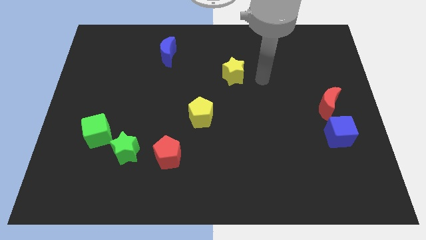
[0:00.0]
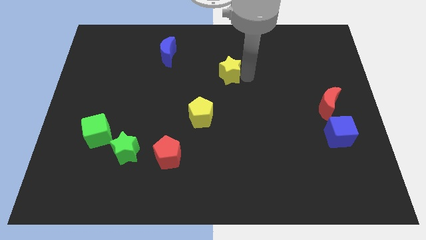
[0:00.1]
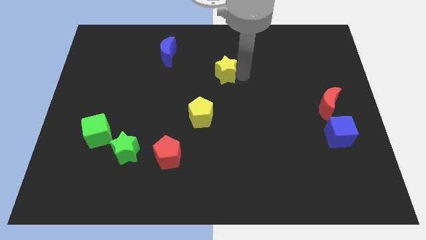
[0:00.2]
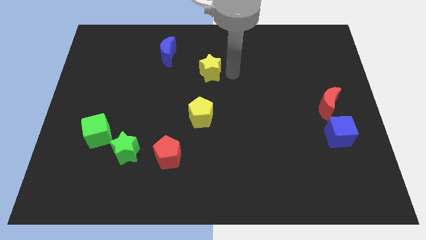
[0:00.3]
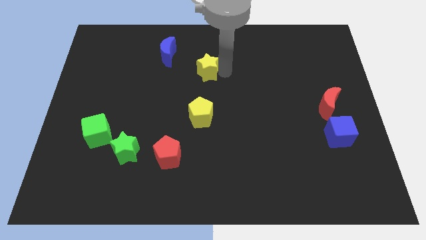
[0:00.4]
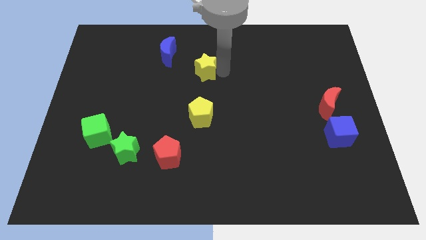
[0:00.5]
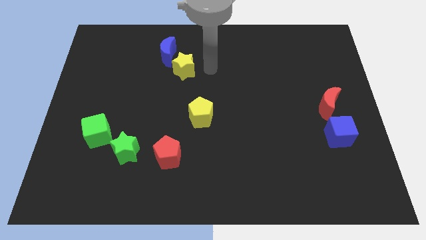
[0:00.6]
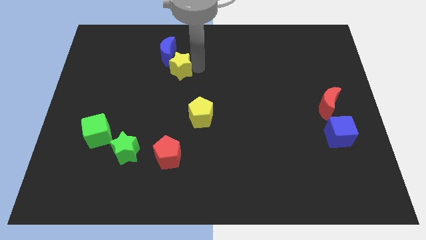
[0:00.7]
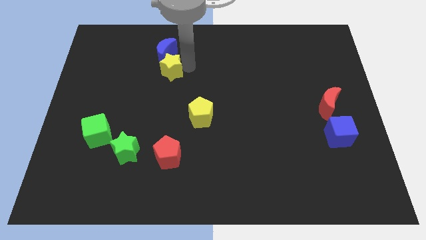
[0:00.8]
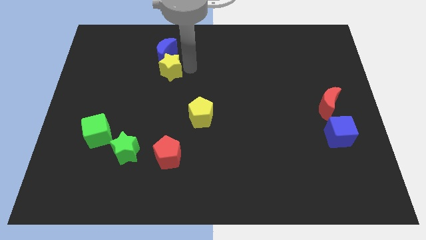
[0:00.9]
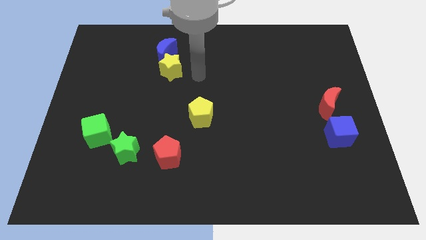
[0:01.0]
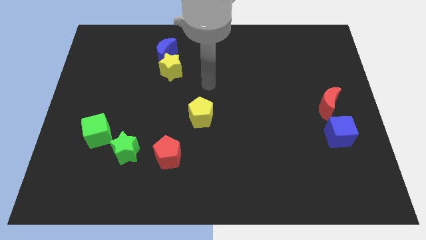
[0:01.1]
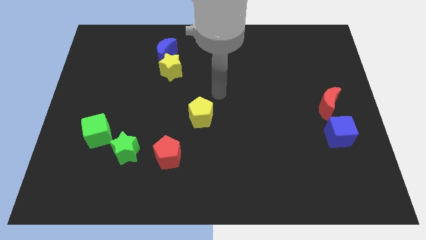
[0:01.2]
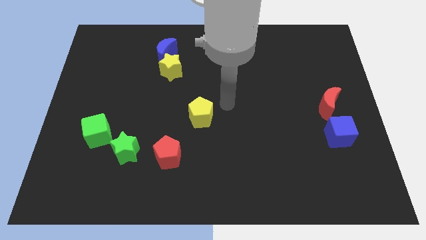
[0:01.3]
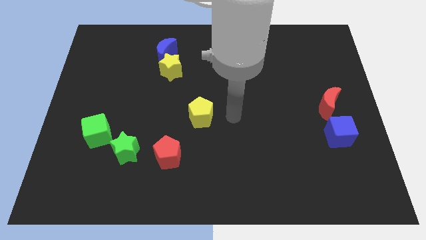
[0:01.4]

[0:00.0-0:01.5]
move the yellow star to the bottom of the blue moon

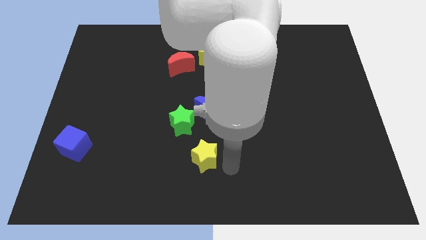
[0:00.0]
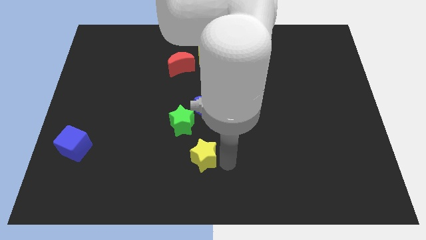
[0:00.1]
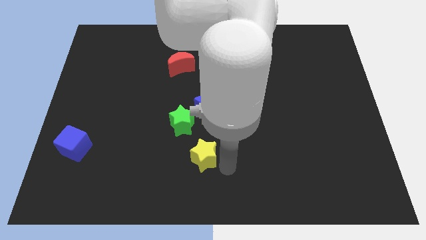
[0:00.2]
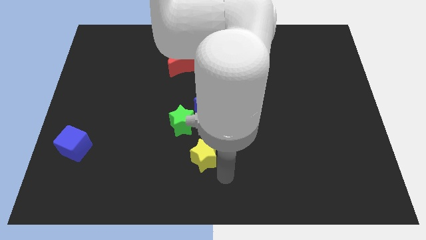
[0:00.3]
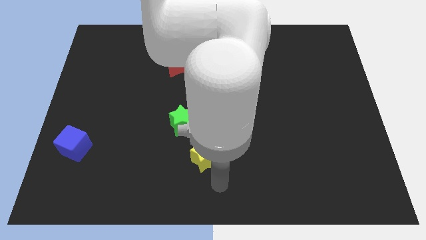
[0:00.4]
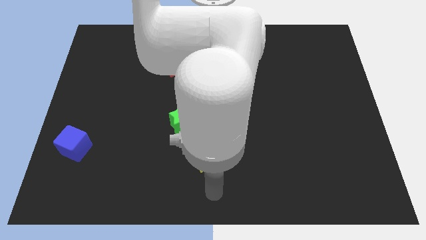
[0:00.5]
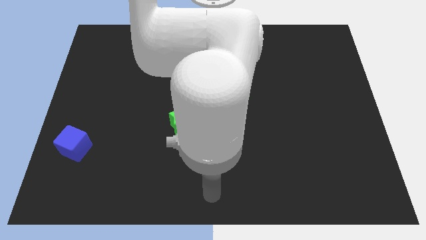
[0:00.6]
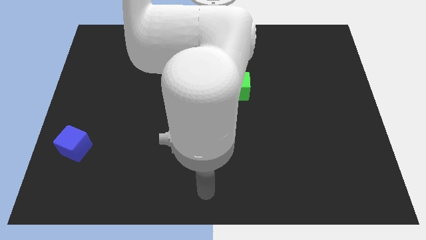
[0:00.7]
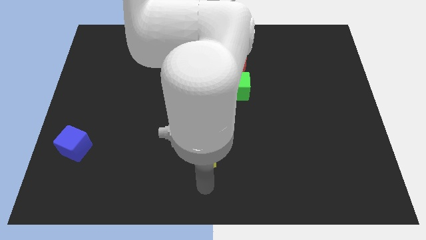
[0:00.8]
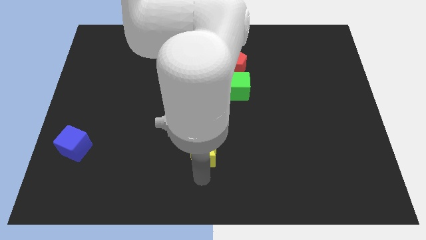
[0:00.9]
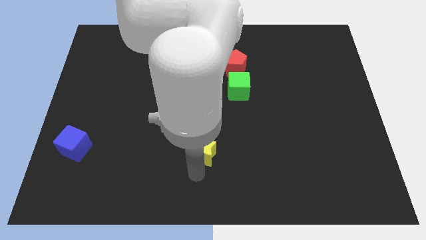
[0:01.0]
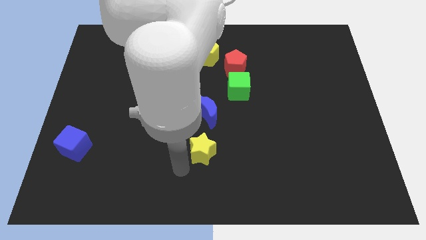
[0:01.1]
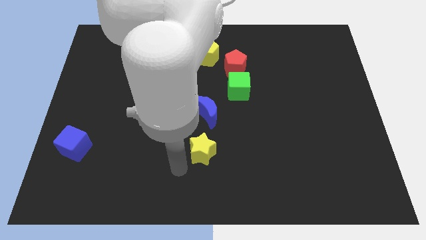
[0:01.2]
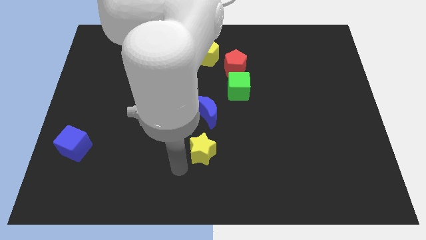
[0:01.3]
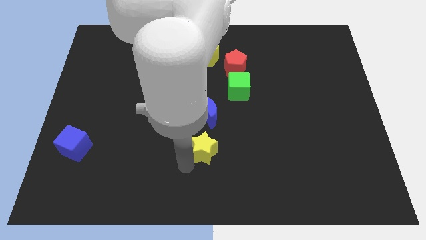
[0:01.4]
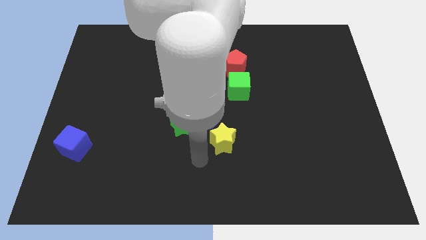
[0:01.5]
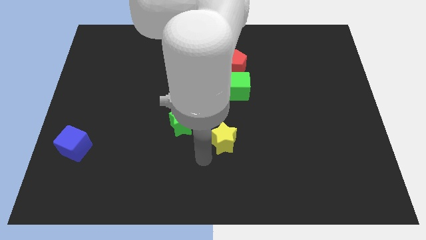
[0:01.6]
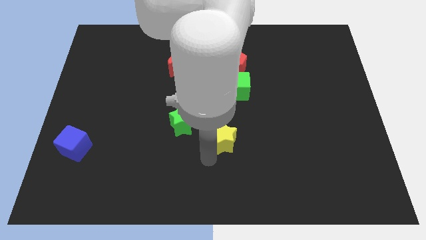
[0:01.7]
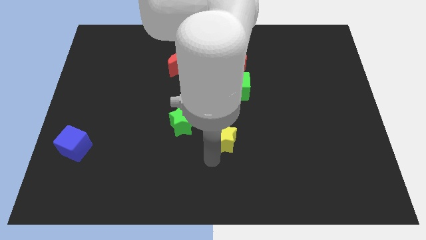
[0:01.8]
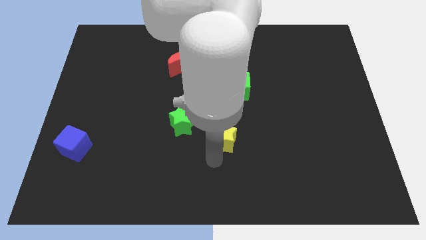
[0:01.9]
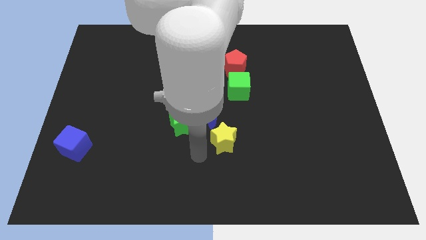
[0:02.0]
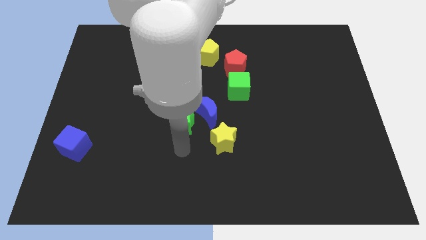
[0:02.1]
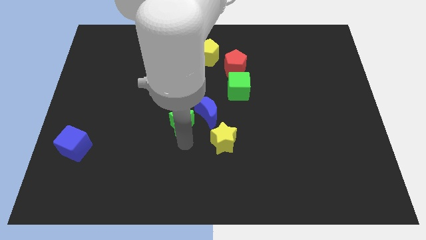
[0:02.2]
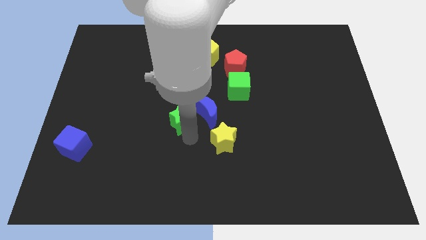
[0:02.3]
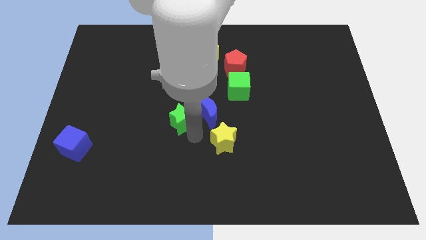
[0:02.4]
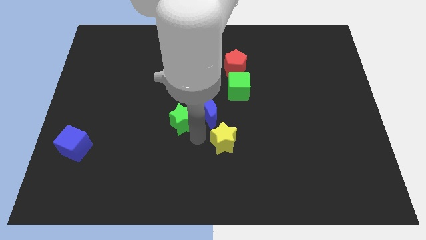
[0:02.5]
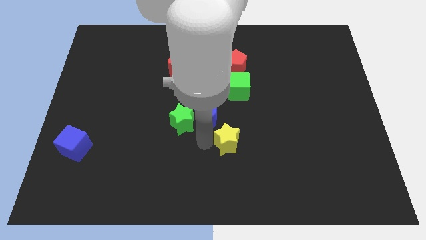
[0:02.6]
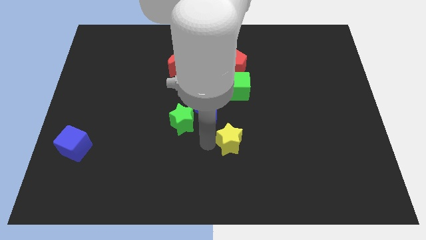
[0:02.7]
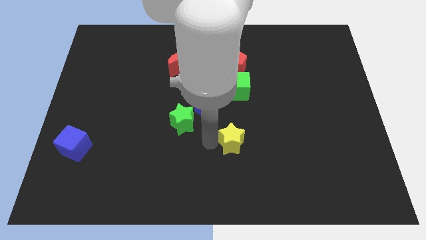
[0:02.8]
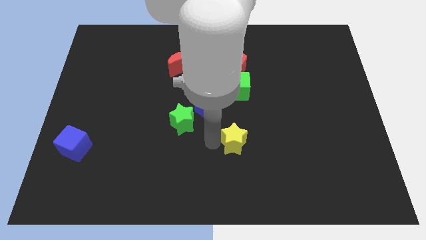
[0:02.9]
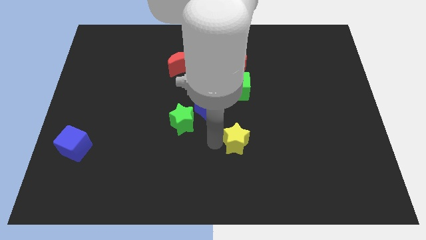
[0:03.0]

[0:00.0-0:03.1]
move the yellow star vertically below the green cube

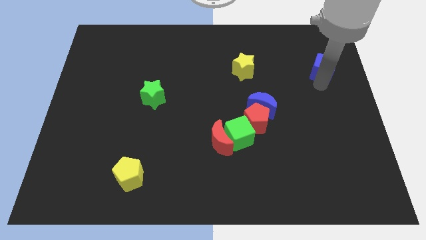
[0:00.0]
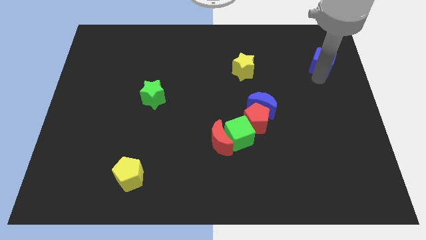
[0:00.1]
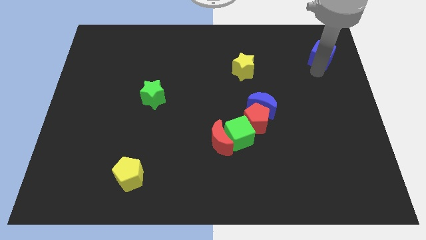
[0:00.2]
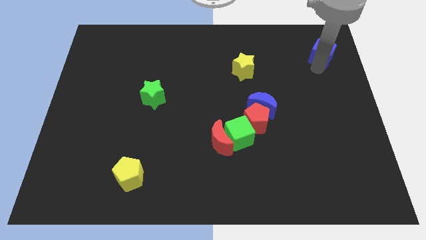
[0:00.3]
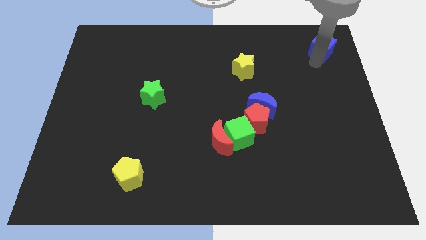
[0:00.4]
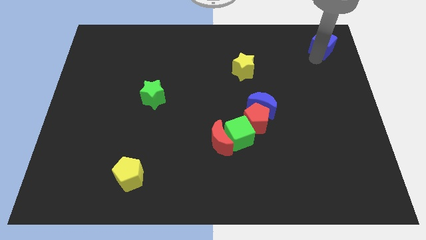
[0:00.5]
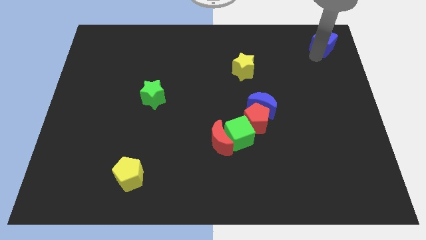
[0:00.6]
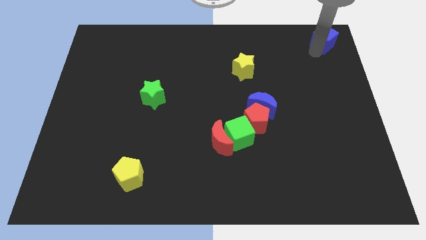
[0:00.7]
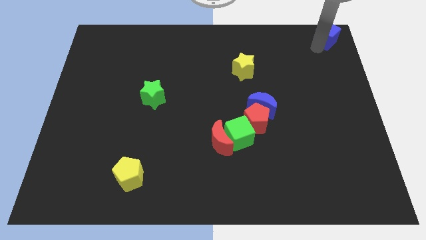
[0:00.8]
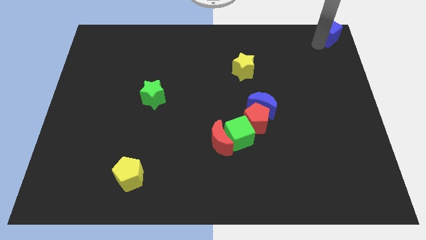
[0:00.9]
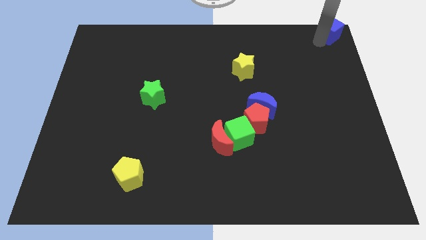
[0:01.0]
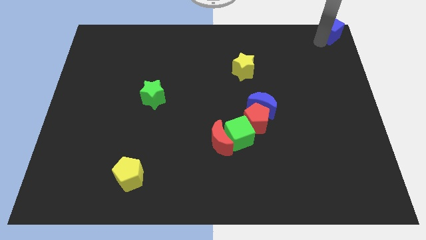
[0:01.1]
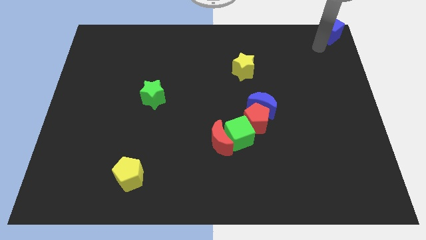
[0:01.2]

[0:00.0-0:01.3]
place the blue cube at the top right corner

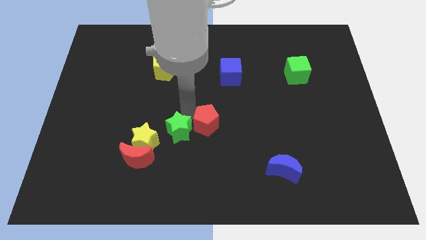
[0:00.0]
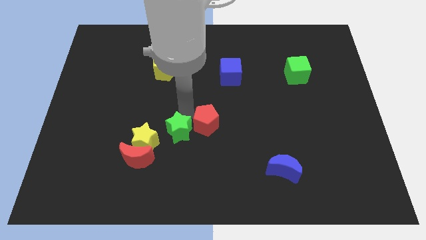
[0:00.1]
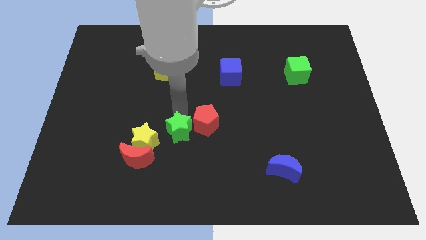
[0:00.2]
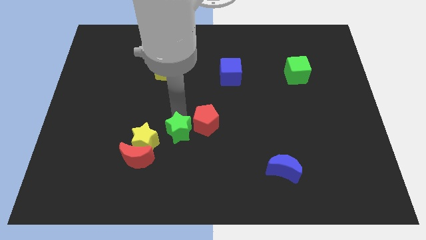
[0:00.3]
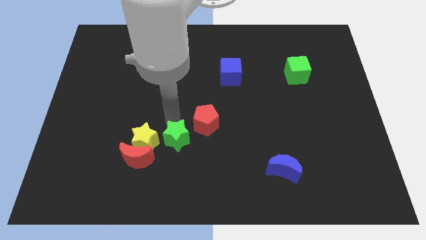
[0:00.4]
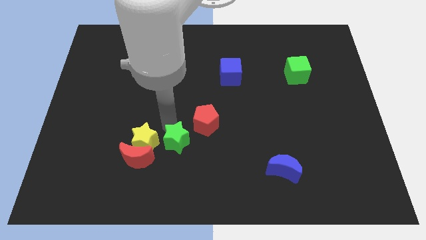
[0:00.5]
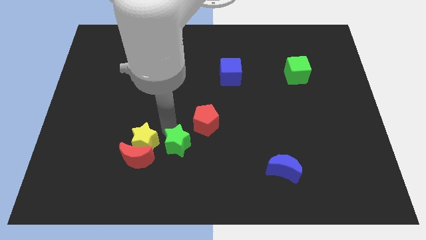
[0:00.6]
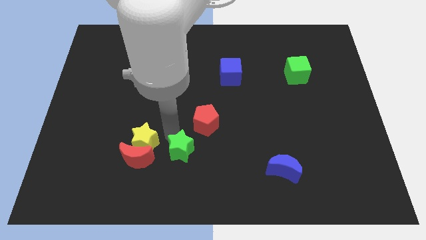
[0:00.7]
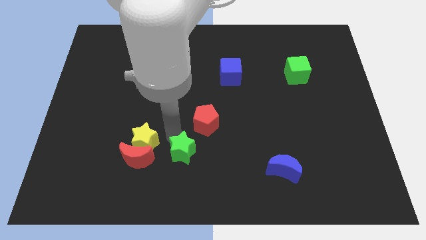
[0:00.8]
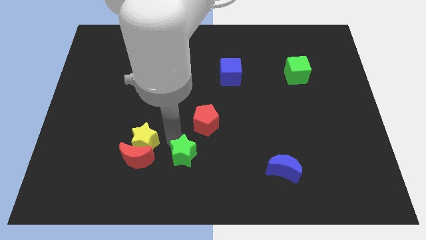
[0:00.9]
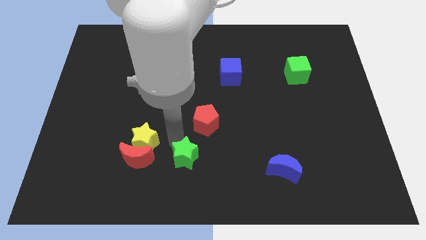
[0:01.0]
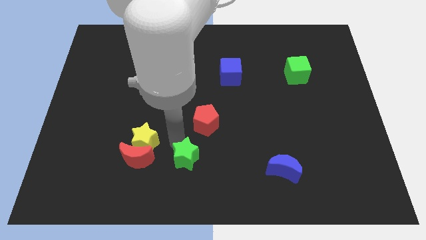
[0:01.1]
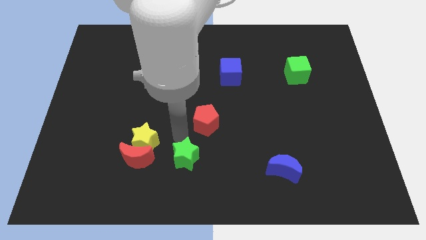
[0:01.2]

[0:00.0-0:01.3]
push the green star slightly downwards

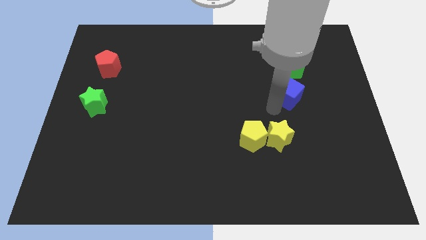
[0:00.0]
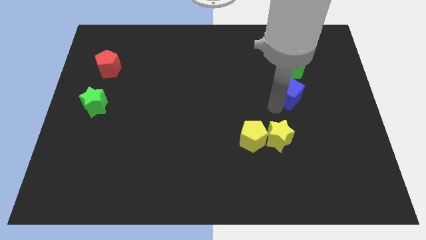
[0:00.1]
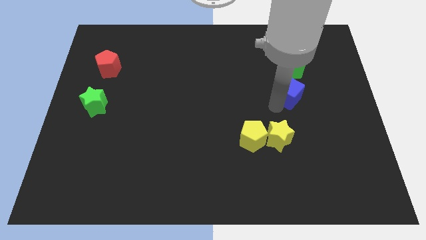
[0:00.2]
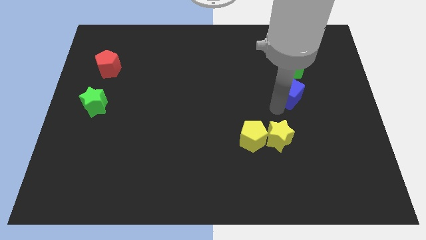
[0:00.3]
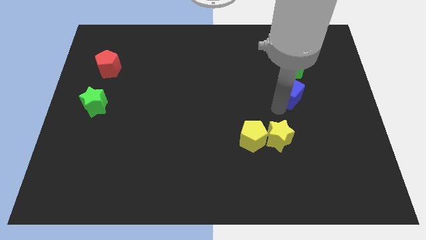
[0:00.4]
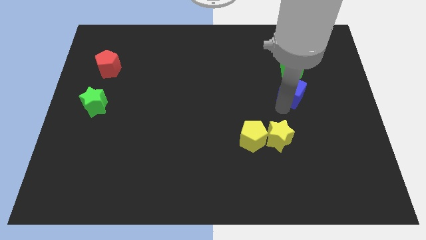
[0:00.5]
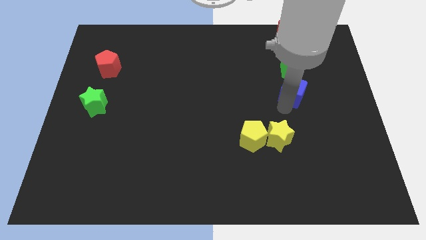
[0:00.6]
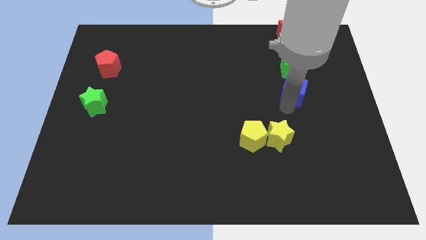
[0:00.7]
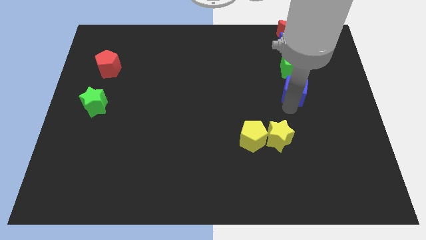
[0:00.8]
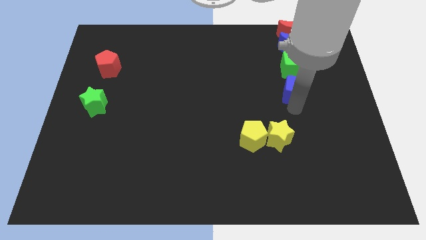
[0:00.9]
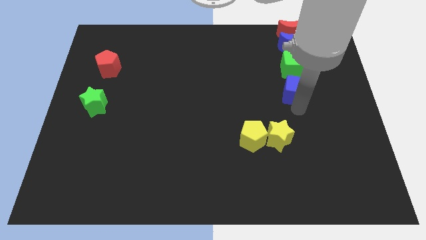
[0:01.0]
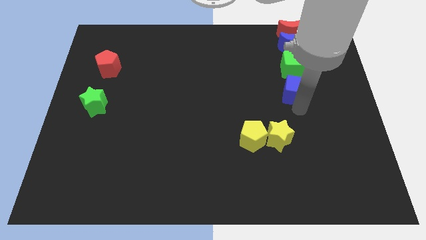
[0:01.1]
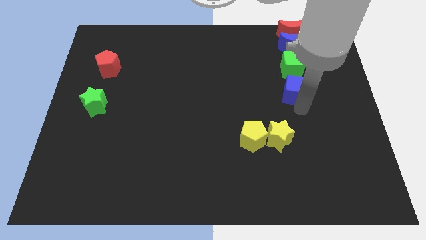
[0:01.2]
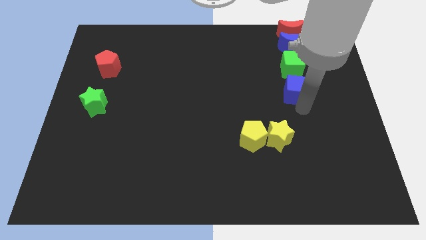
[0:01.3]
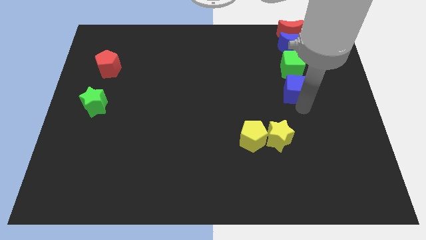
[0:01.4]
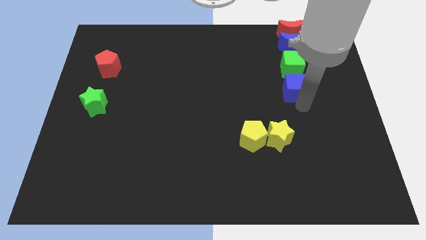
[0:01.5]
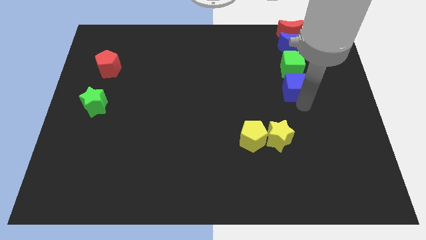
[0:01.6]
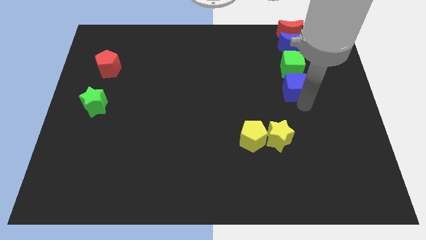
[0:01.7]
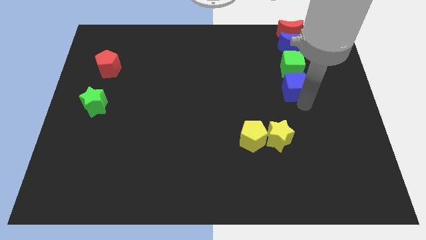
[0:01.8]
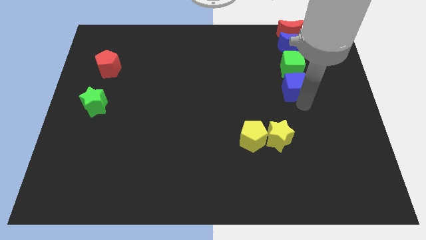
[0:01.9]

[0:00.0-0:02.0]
move the blue cube below the green cube
